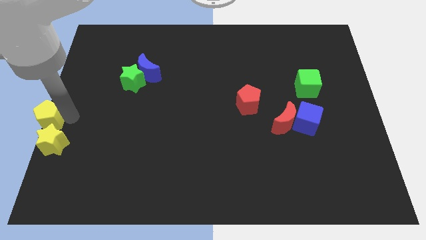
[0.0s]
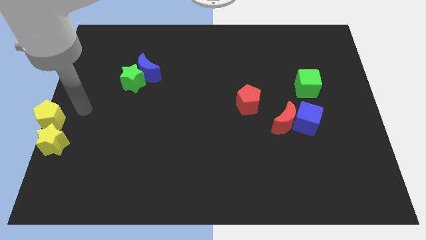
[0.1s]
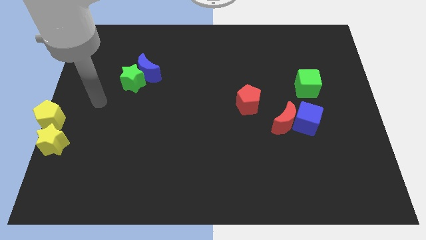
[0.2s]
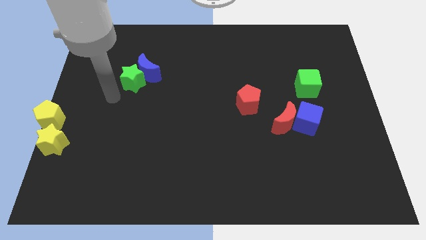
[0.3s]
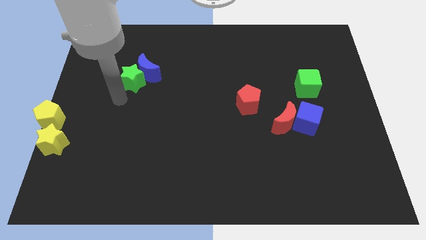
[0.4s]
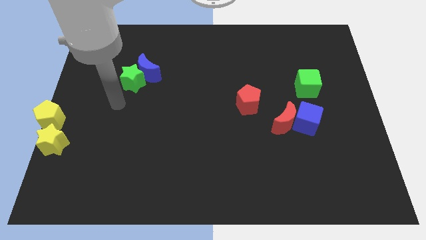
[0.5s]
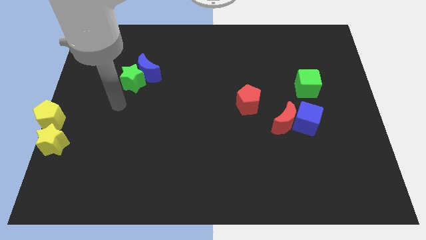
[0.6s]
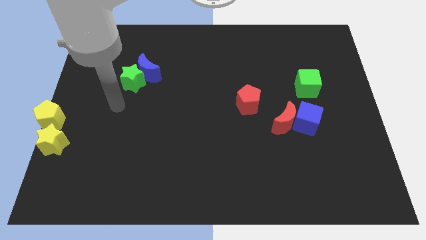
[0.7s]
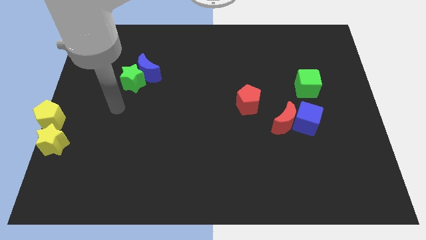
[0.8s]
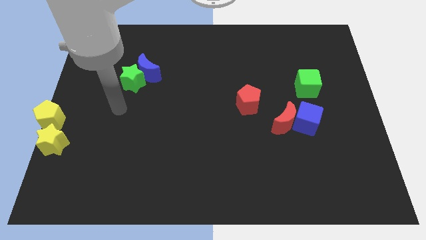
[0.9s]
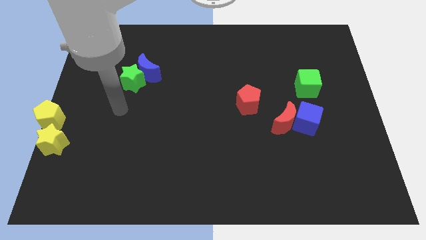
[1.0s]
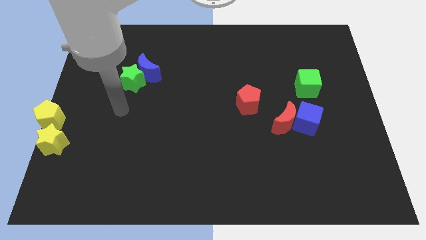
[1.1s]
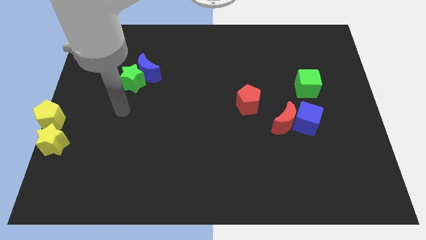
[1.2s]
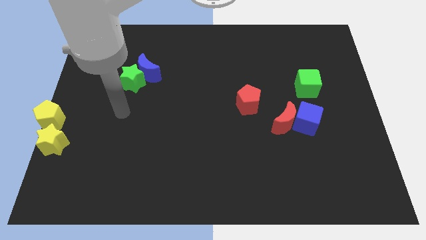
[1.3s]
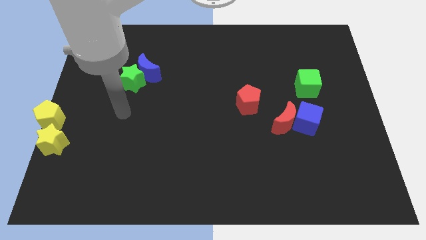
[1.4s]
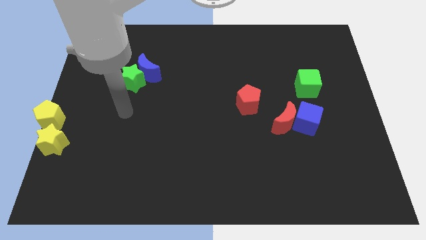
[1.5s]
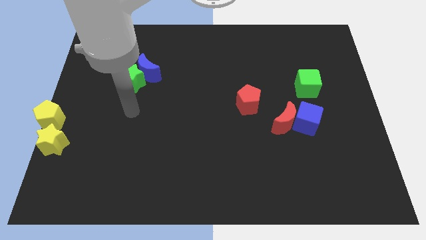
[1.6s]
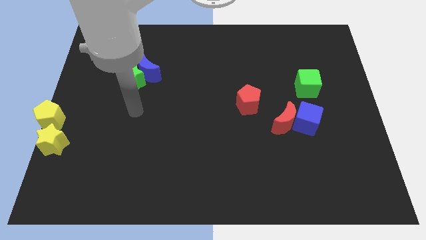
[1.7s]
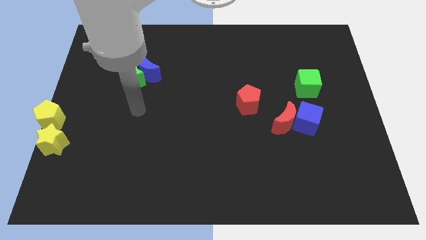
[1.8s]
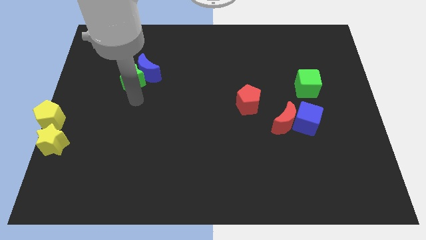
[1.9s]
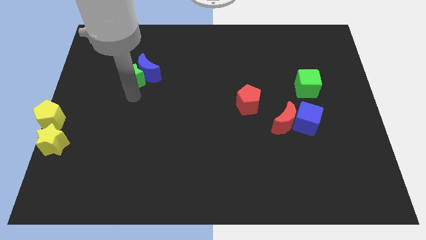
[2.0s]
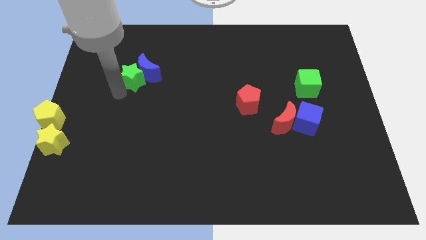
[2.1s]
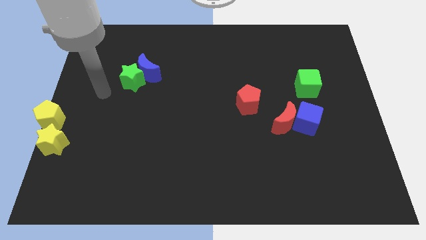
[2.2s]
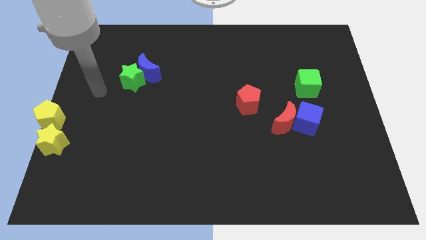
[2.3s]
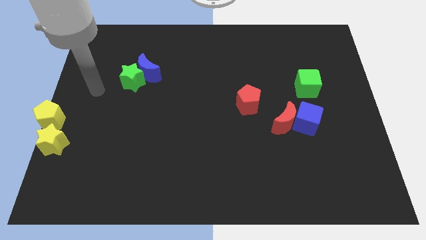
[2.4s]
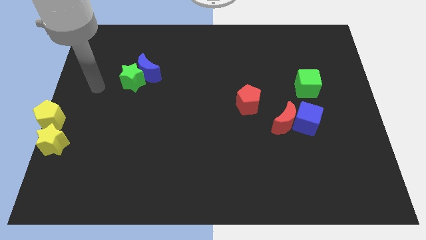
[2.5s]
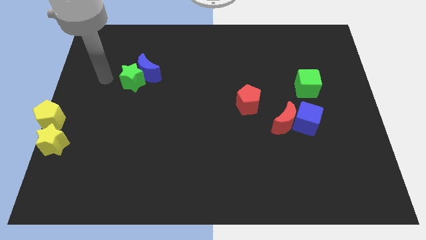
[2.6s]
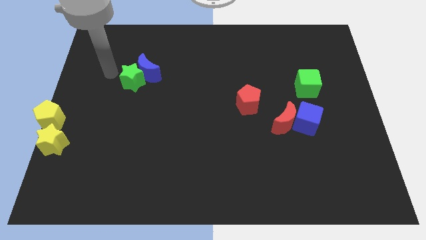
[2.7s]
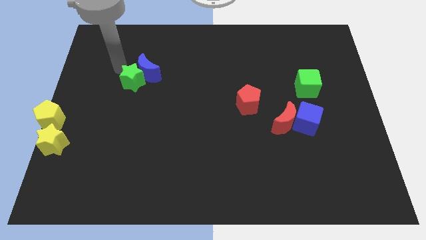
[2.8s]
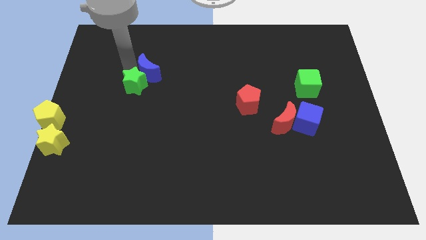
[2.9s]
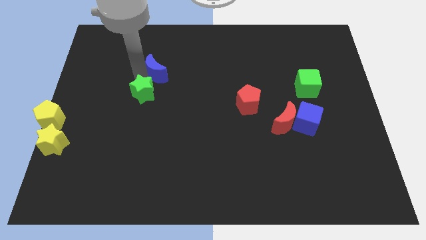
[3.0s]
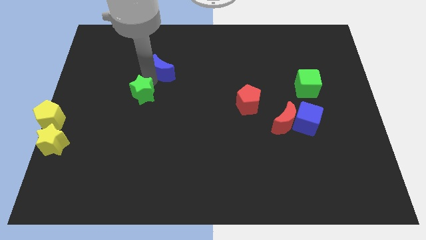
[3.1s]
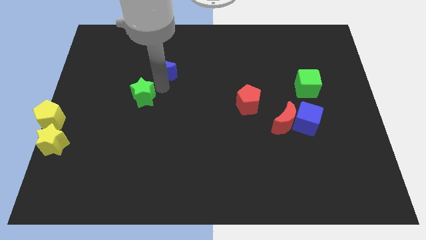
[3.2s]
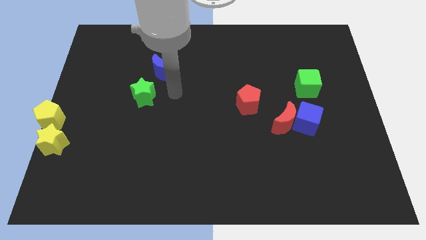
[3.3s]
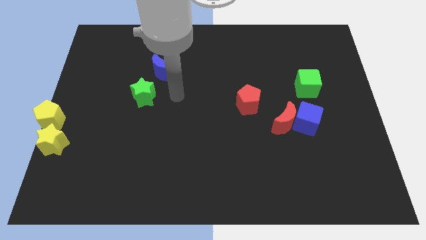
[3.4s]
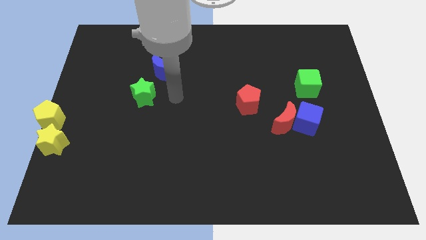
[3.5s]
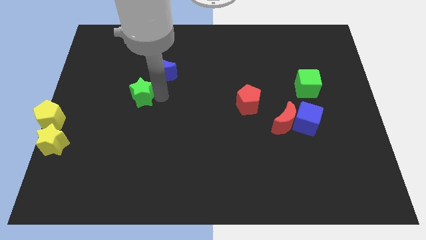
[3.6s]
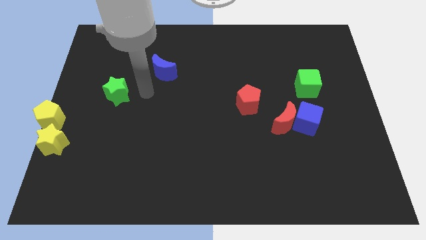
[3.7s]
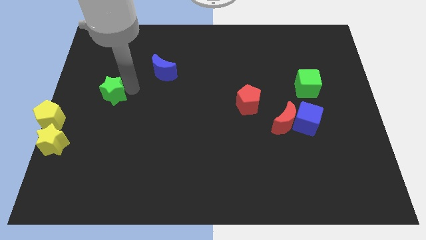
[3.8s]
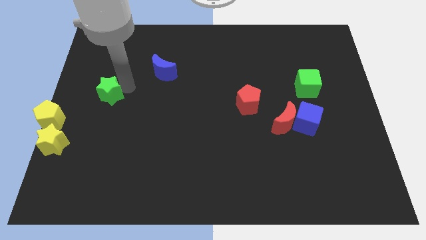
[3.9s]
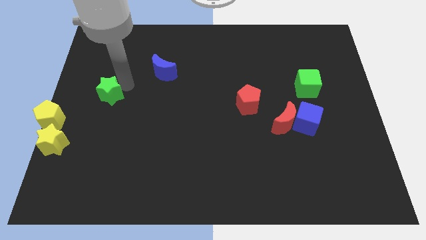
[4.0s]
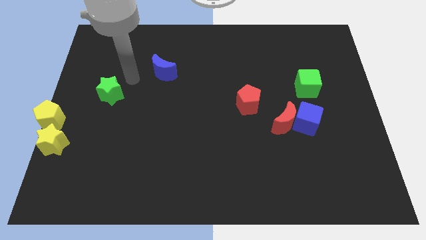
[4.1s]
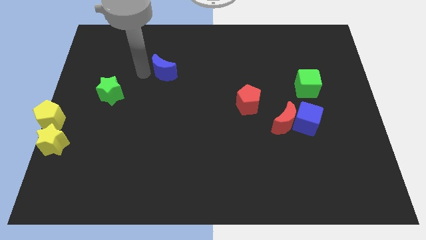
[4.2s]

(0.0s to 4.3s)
separate the green star and blue crescent

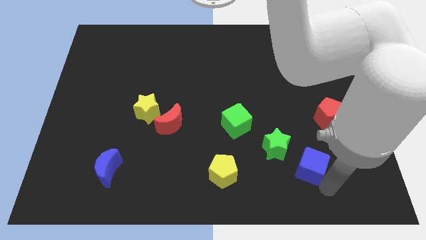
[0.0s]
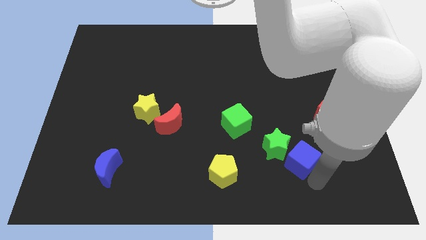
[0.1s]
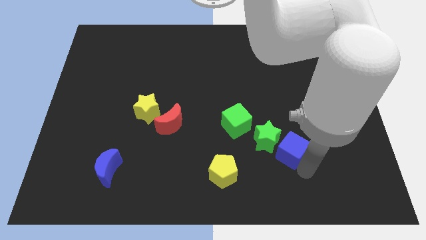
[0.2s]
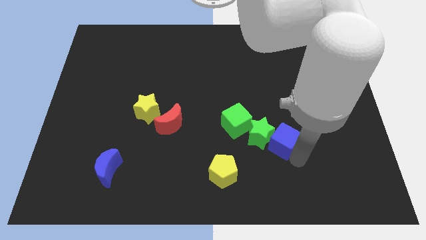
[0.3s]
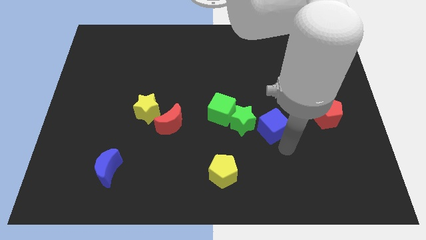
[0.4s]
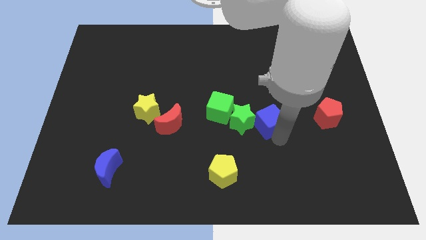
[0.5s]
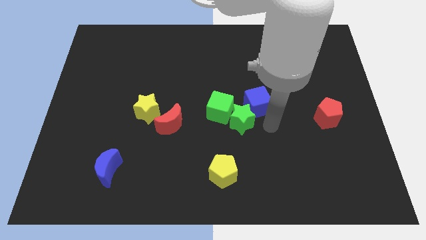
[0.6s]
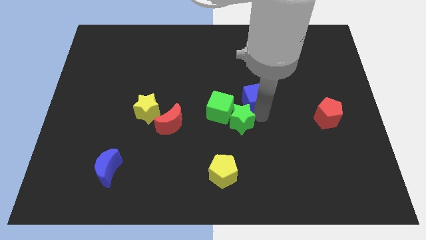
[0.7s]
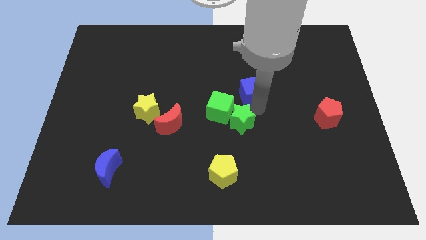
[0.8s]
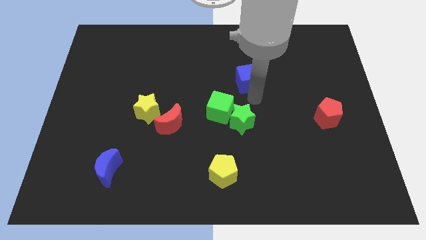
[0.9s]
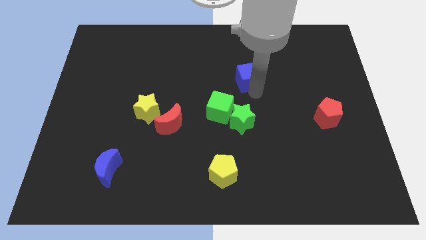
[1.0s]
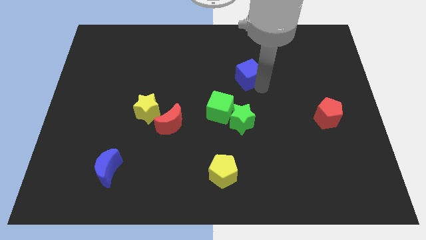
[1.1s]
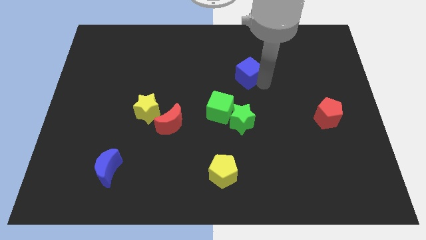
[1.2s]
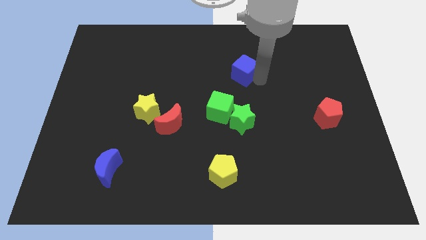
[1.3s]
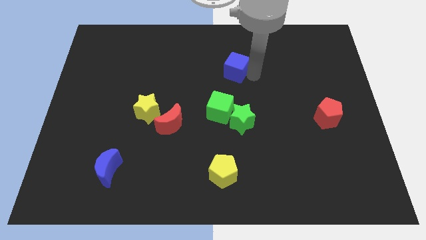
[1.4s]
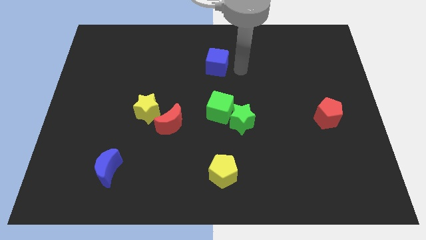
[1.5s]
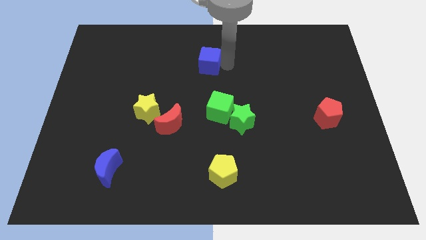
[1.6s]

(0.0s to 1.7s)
push the blue cube on green cube

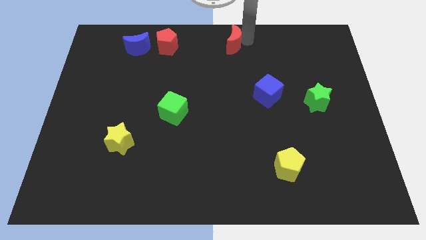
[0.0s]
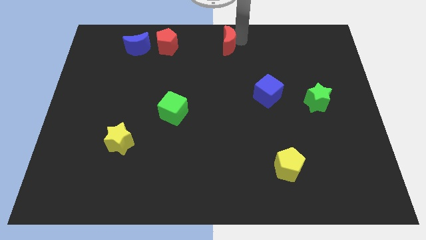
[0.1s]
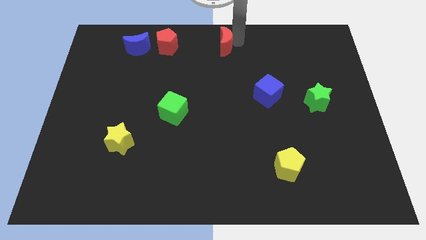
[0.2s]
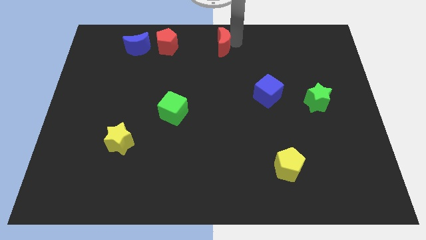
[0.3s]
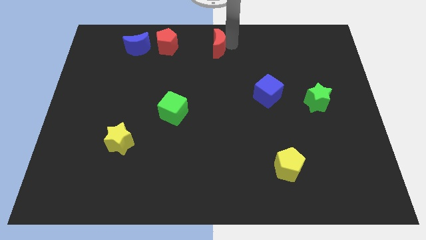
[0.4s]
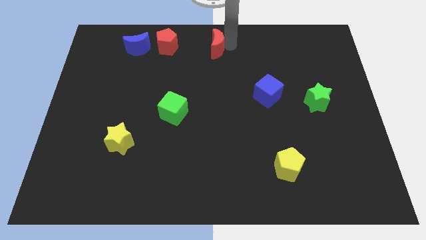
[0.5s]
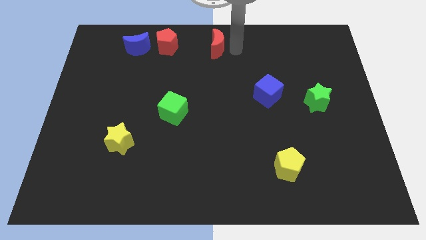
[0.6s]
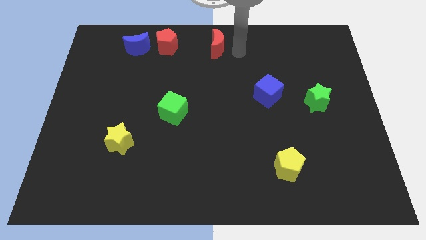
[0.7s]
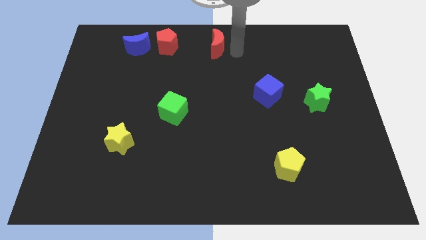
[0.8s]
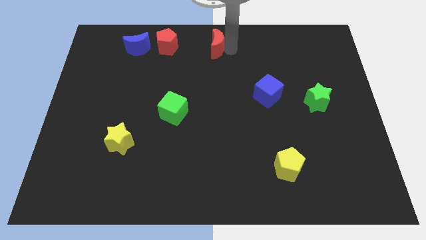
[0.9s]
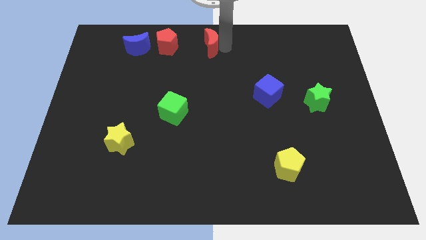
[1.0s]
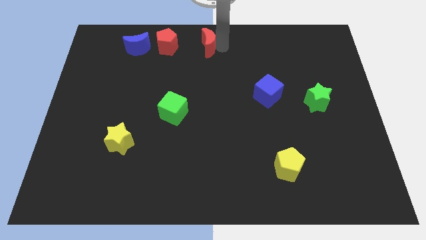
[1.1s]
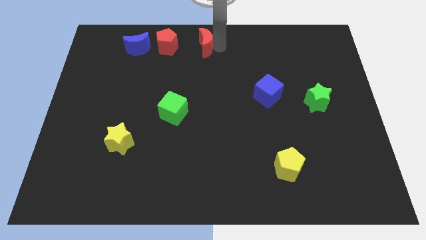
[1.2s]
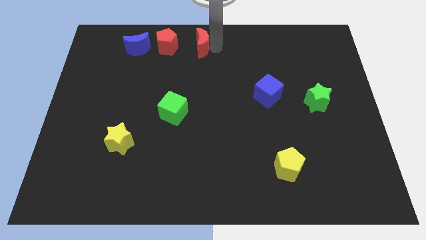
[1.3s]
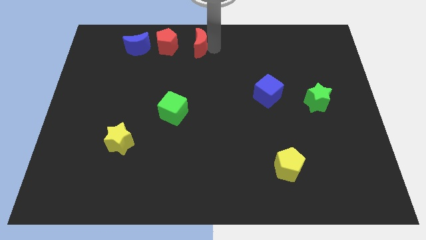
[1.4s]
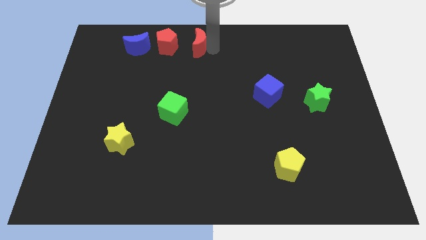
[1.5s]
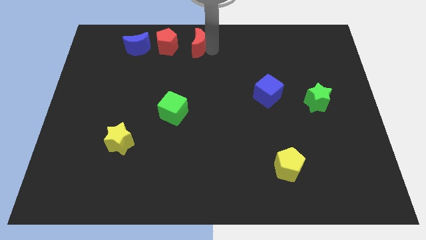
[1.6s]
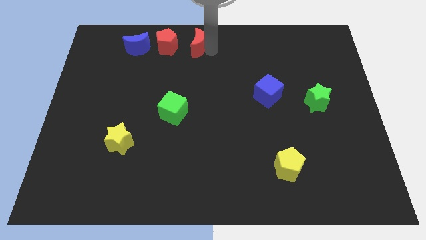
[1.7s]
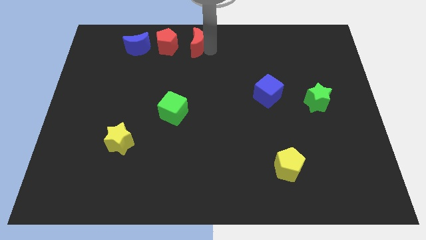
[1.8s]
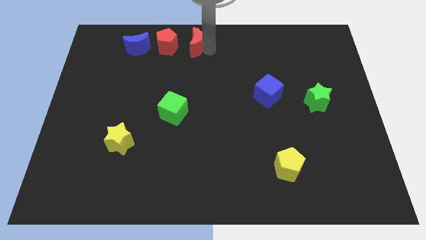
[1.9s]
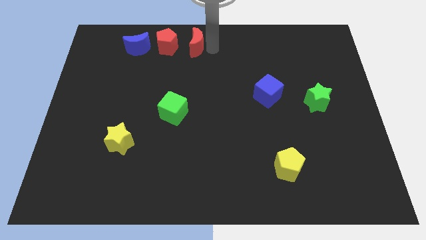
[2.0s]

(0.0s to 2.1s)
place the red crescent to the right of red pentagon

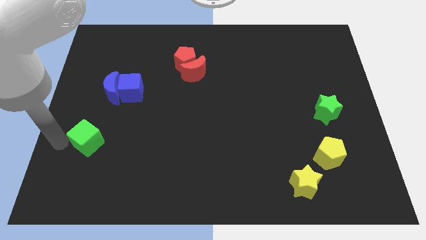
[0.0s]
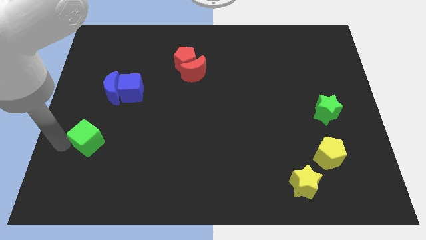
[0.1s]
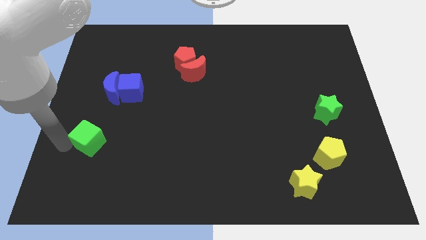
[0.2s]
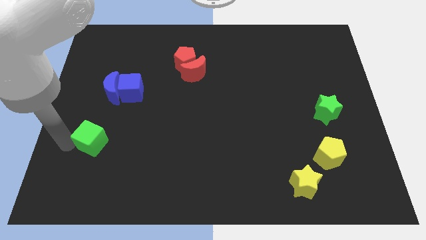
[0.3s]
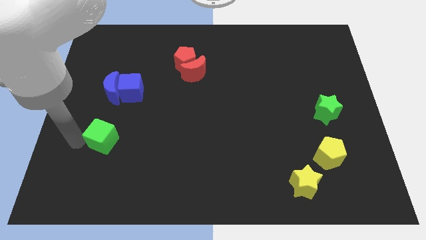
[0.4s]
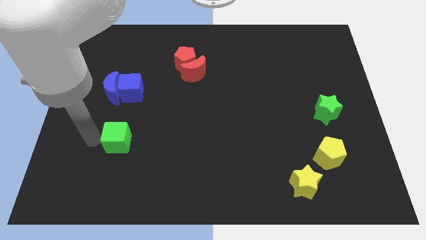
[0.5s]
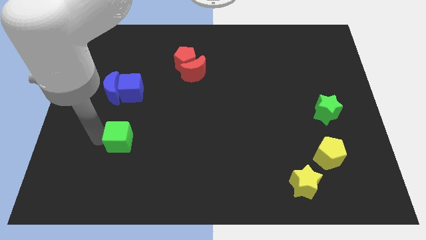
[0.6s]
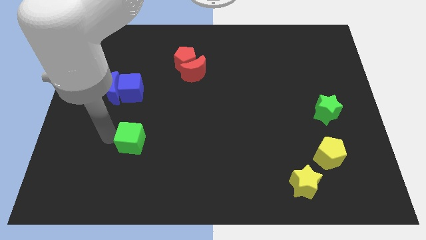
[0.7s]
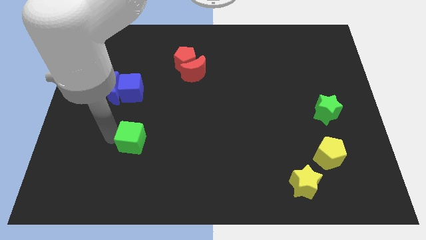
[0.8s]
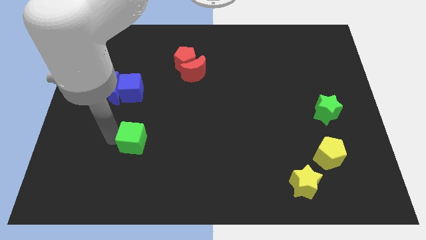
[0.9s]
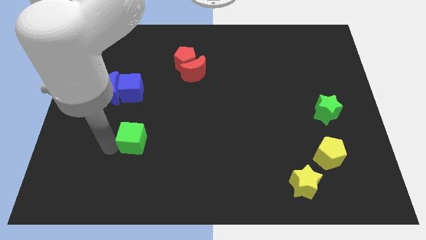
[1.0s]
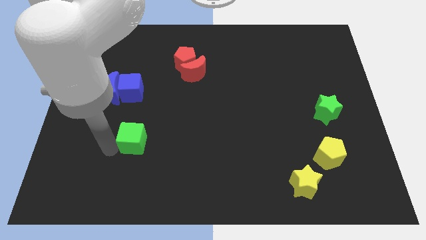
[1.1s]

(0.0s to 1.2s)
place the green cube below the blue cube
